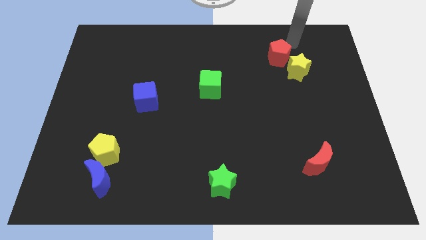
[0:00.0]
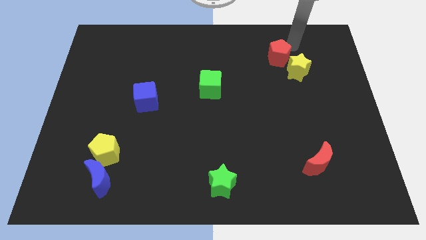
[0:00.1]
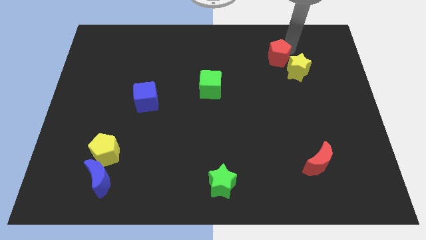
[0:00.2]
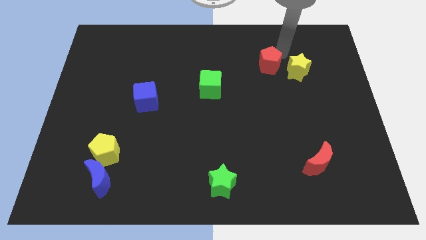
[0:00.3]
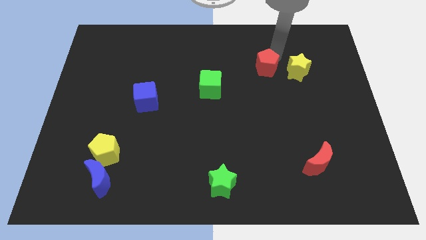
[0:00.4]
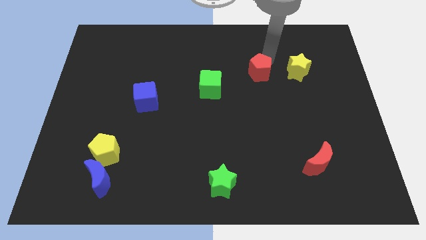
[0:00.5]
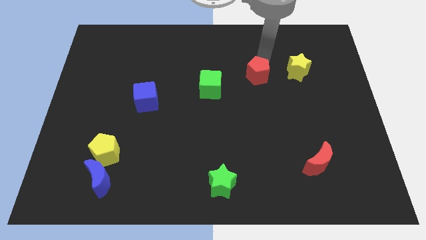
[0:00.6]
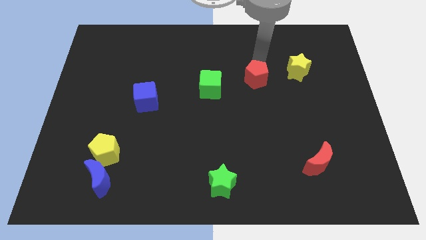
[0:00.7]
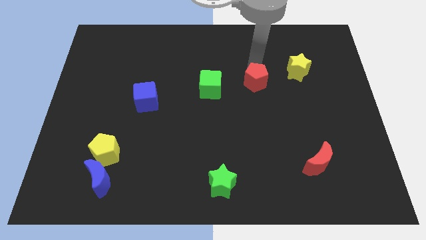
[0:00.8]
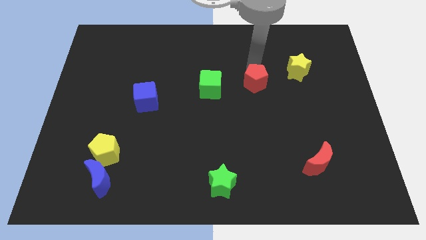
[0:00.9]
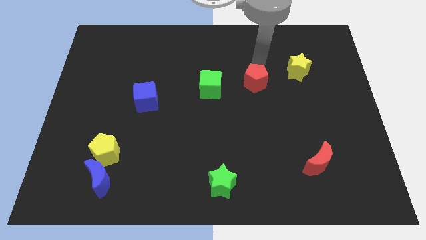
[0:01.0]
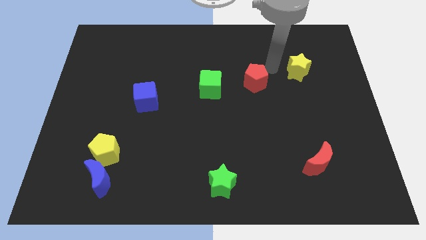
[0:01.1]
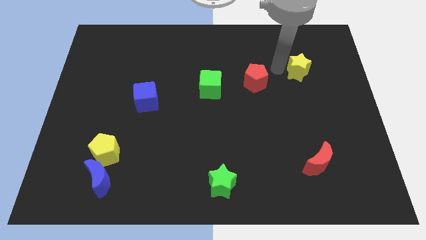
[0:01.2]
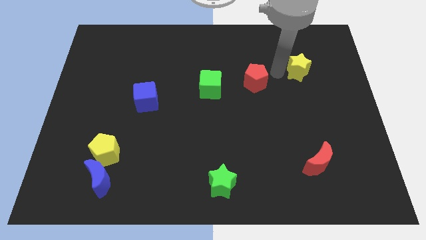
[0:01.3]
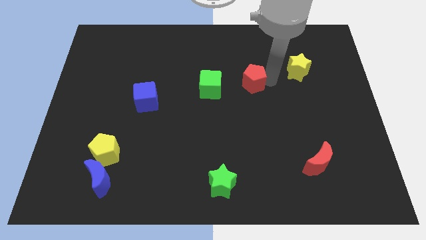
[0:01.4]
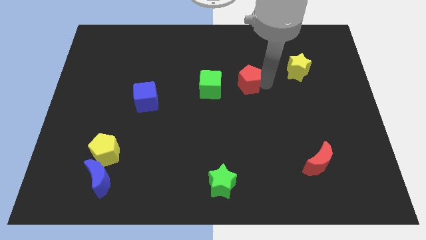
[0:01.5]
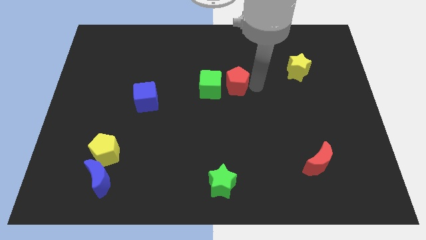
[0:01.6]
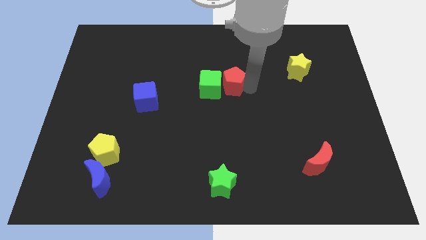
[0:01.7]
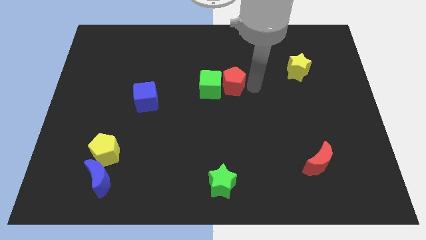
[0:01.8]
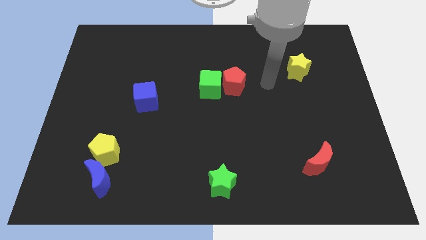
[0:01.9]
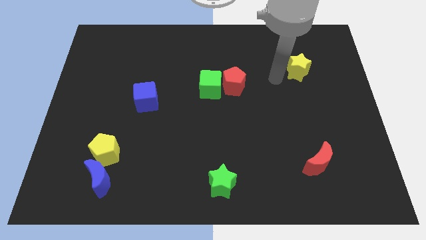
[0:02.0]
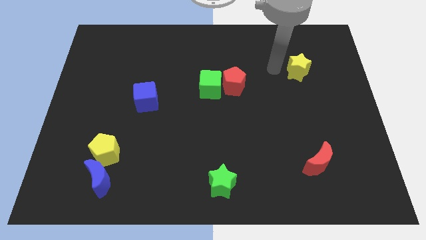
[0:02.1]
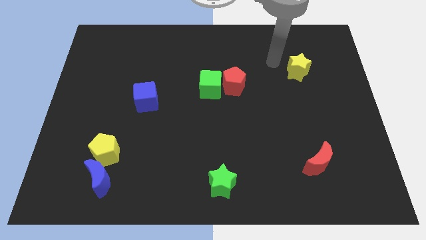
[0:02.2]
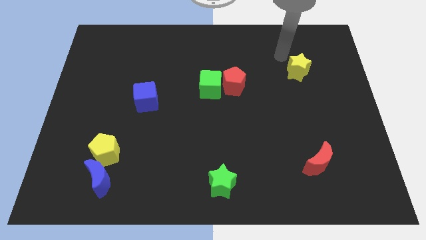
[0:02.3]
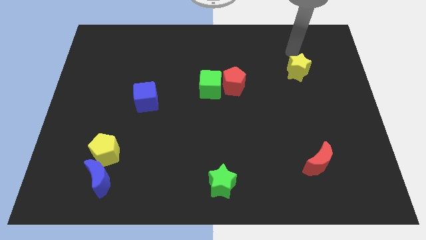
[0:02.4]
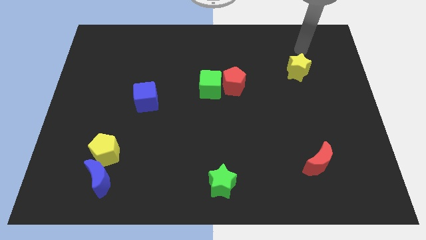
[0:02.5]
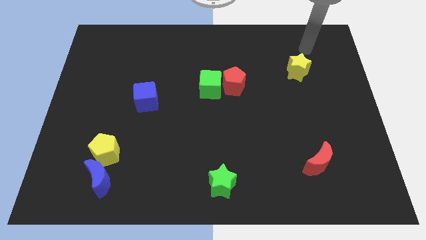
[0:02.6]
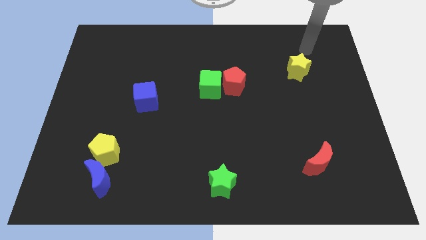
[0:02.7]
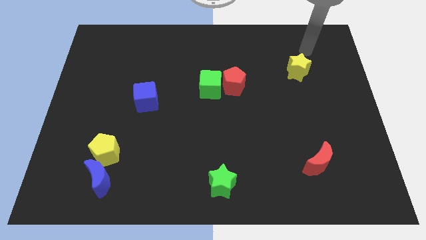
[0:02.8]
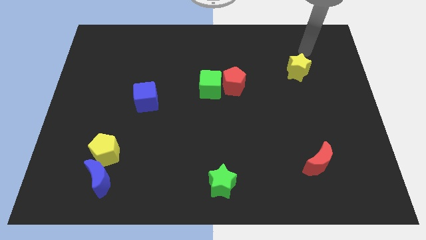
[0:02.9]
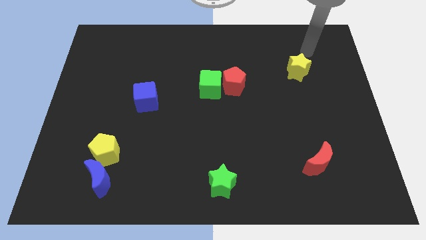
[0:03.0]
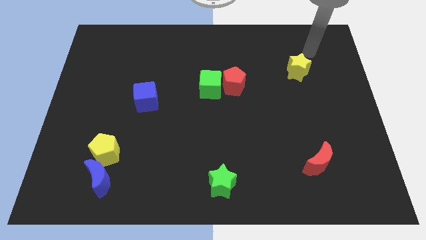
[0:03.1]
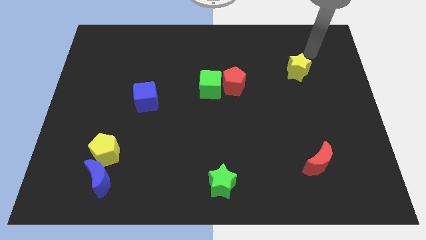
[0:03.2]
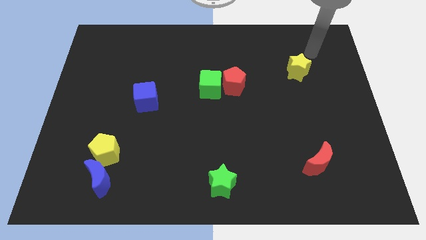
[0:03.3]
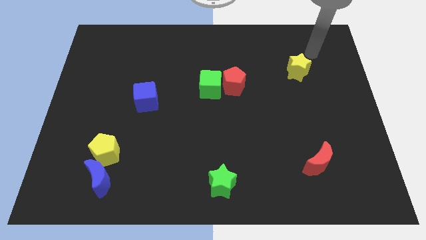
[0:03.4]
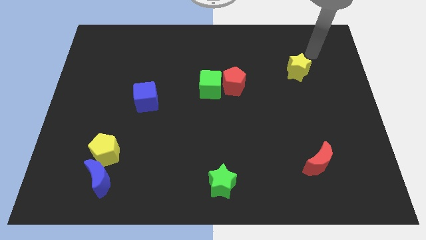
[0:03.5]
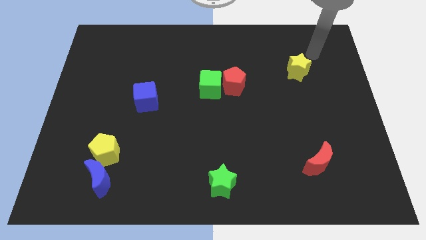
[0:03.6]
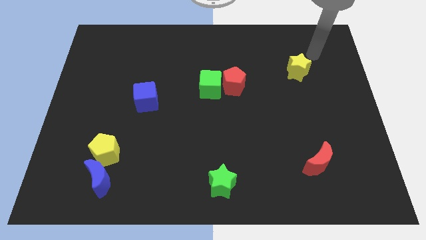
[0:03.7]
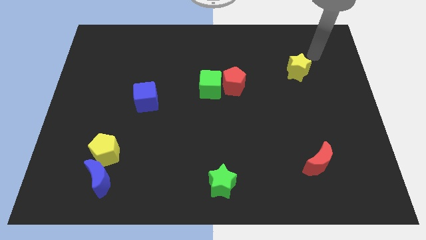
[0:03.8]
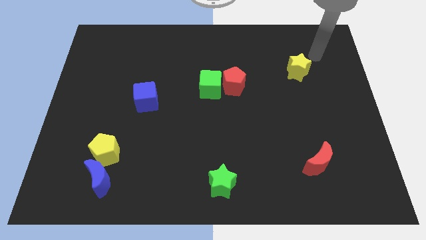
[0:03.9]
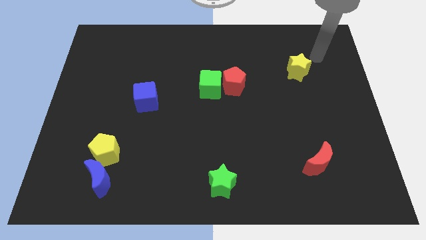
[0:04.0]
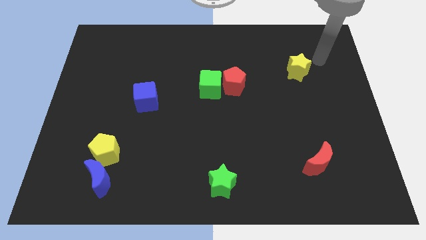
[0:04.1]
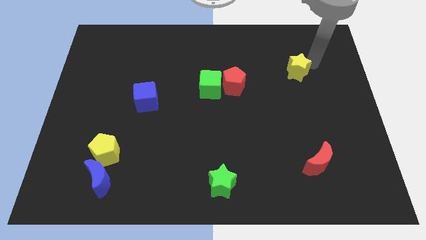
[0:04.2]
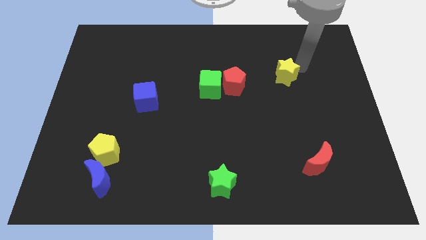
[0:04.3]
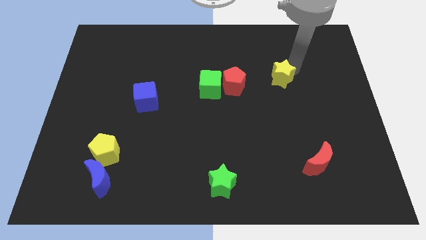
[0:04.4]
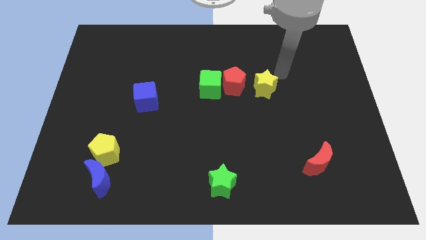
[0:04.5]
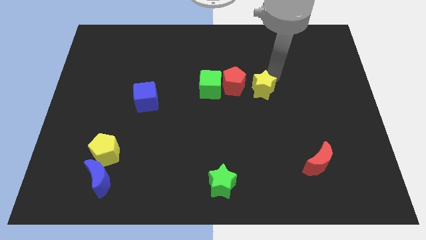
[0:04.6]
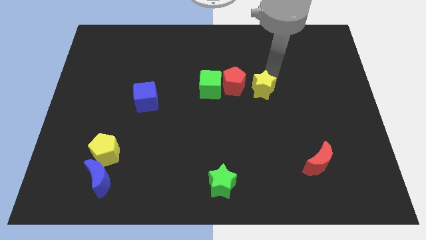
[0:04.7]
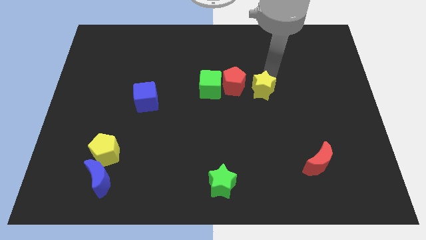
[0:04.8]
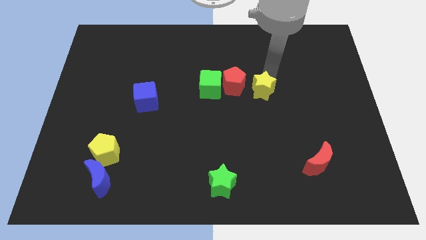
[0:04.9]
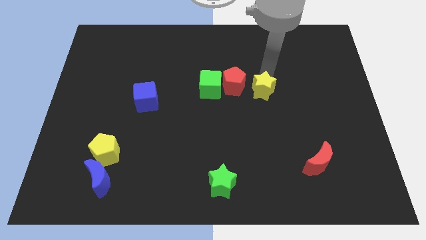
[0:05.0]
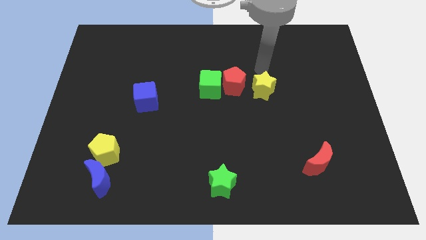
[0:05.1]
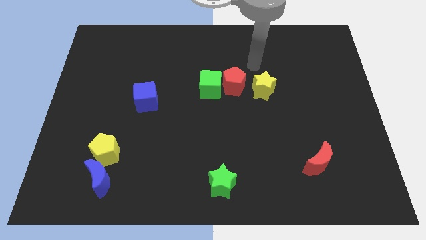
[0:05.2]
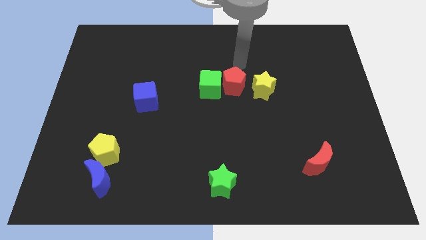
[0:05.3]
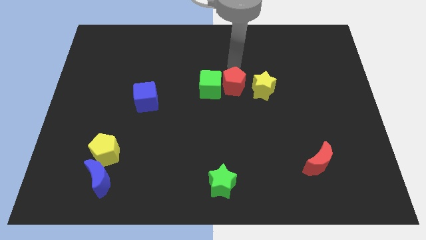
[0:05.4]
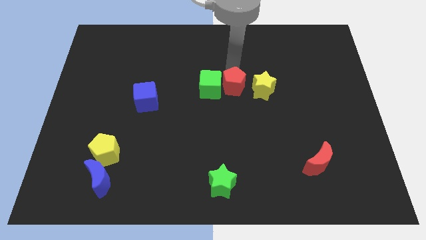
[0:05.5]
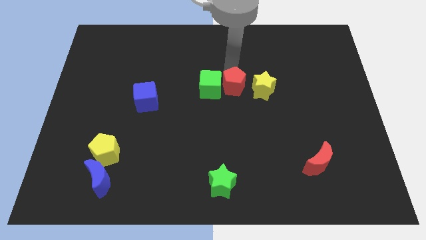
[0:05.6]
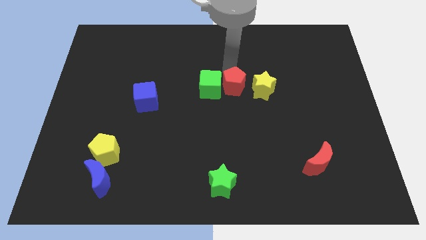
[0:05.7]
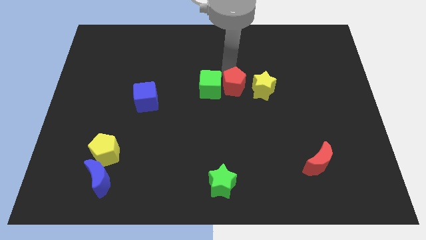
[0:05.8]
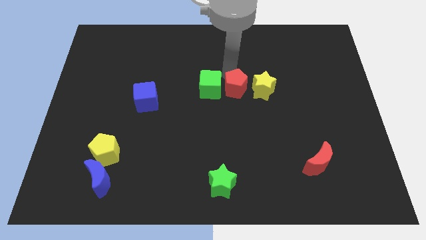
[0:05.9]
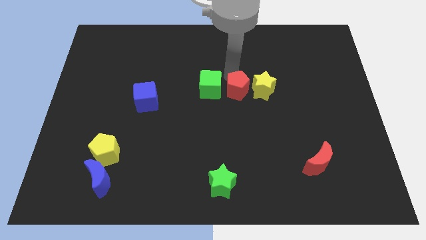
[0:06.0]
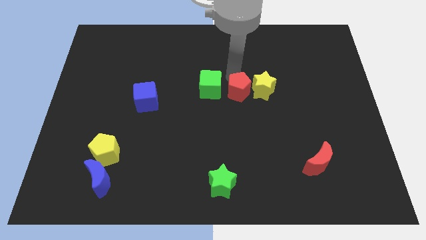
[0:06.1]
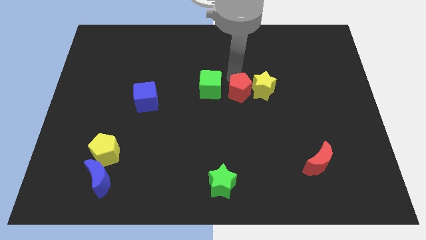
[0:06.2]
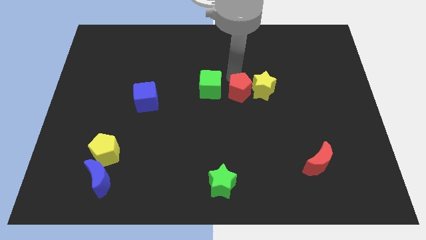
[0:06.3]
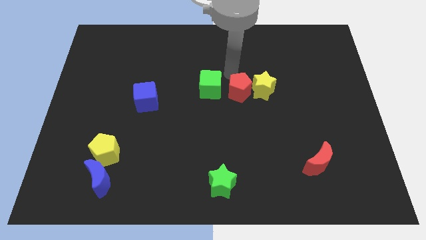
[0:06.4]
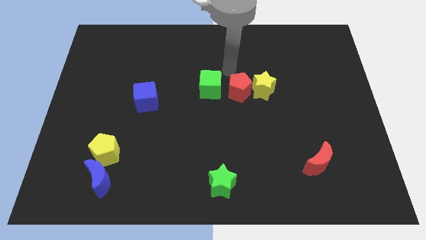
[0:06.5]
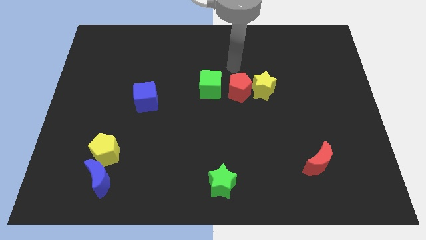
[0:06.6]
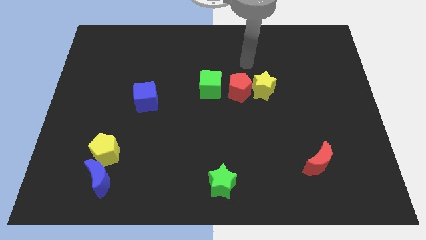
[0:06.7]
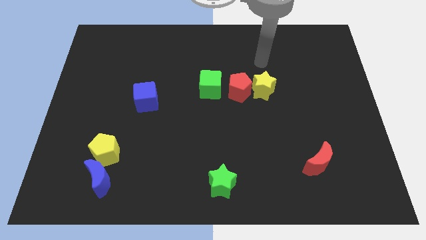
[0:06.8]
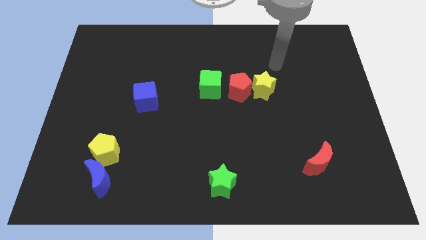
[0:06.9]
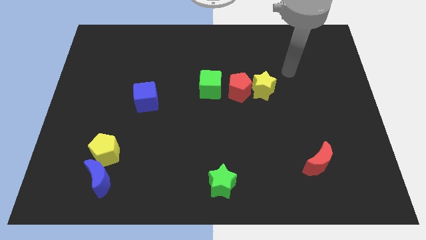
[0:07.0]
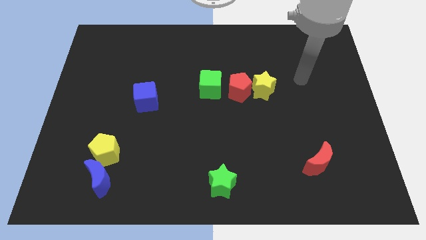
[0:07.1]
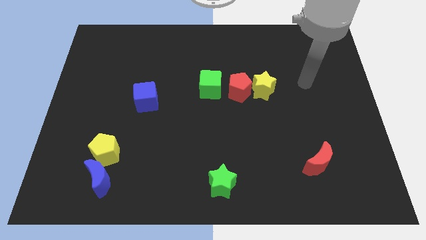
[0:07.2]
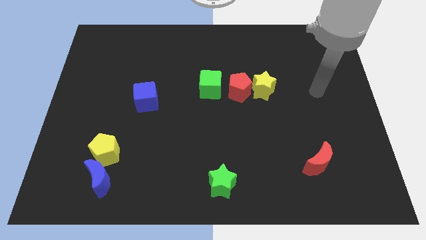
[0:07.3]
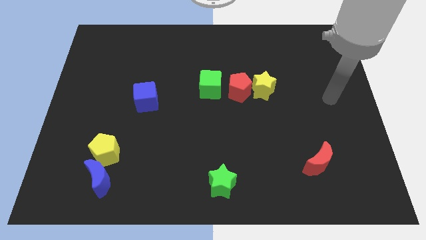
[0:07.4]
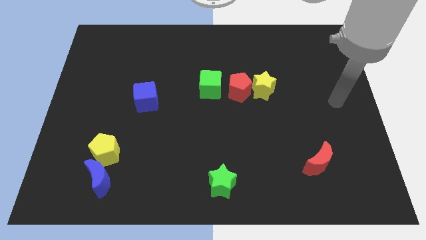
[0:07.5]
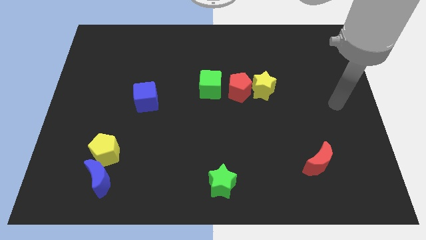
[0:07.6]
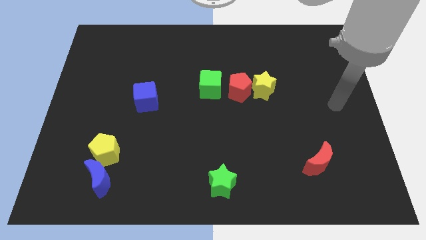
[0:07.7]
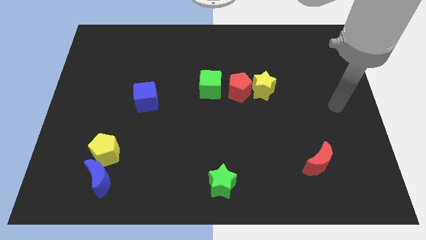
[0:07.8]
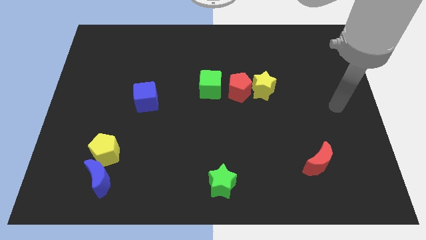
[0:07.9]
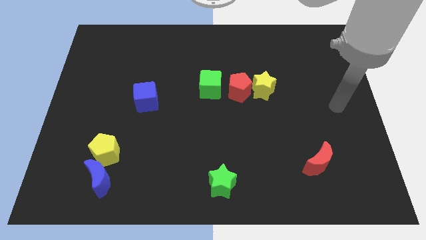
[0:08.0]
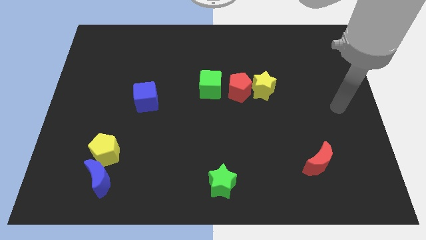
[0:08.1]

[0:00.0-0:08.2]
place the green cube red pentagon and the yellow star in a horizontal line

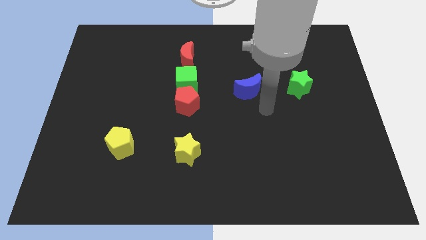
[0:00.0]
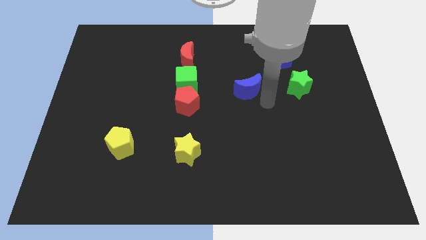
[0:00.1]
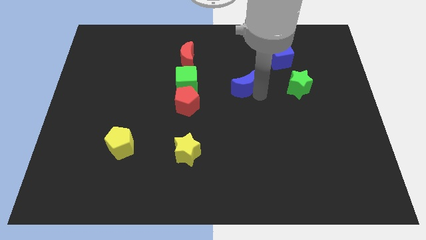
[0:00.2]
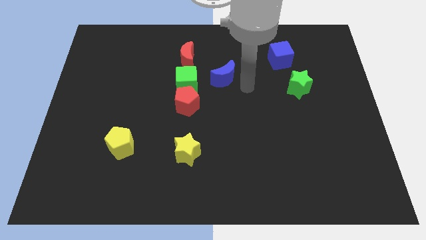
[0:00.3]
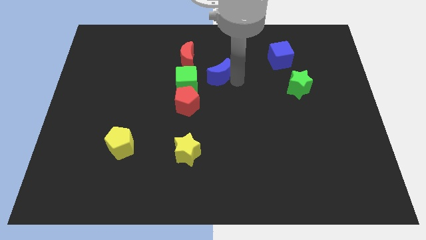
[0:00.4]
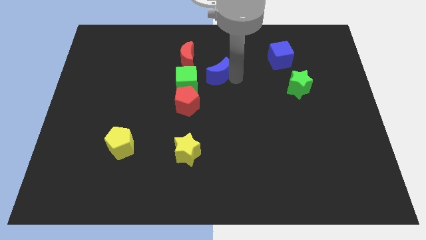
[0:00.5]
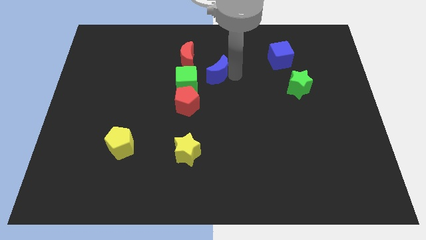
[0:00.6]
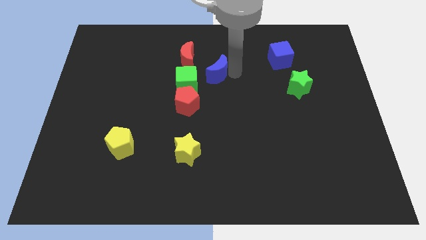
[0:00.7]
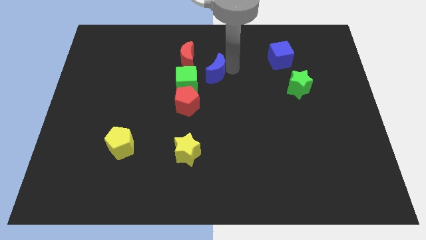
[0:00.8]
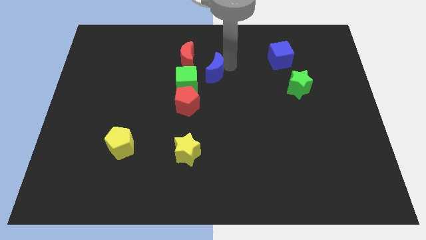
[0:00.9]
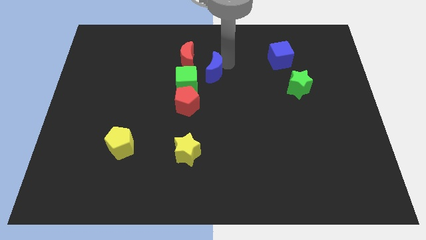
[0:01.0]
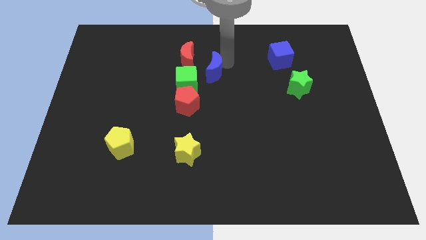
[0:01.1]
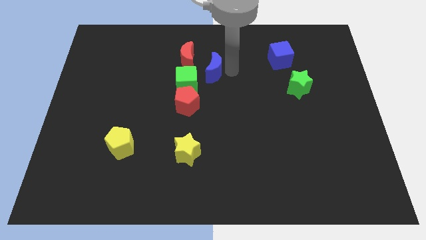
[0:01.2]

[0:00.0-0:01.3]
move the blue crescent near to the red crescent
